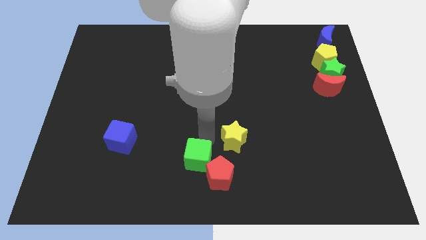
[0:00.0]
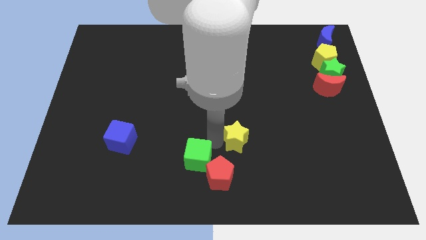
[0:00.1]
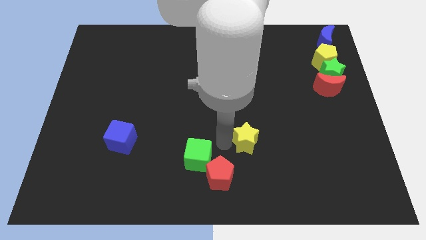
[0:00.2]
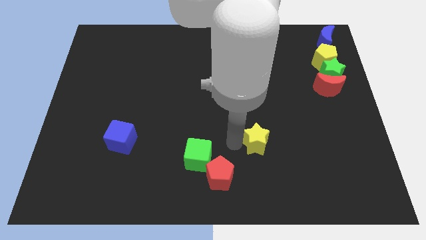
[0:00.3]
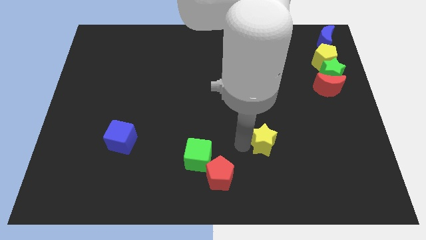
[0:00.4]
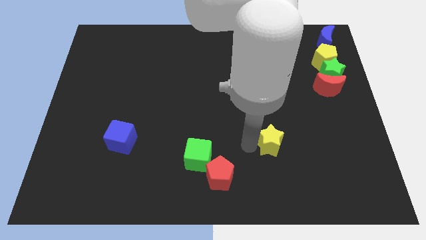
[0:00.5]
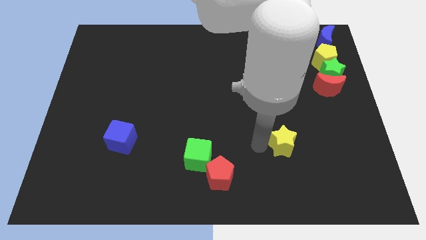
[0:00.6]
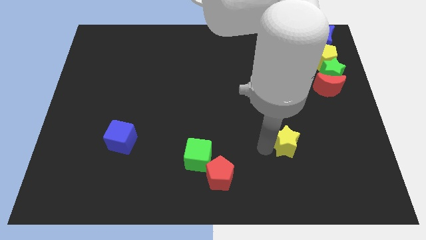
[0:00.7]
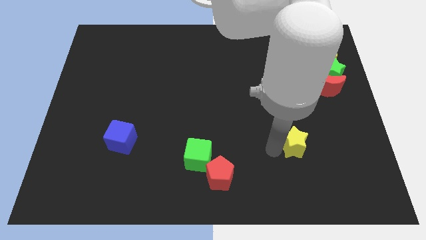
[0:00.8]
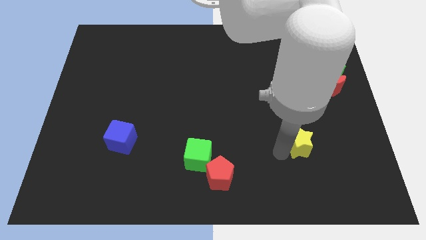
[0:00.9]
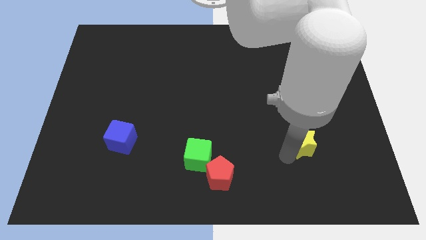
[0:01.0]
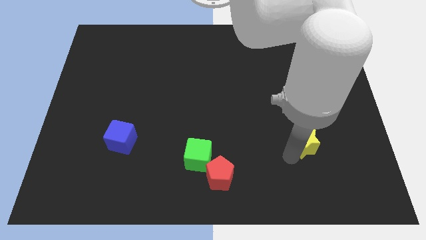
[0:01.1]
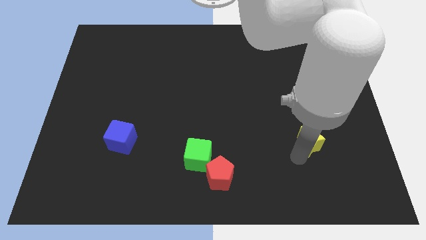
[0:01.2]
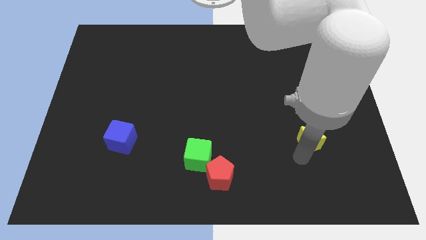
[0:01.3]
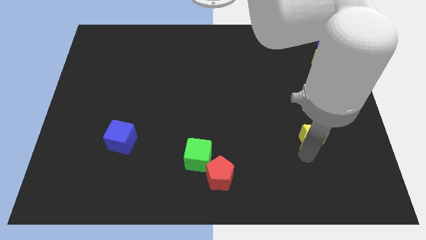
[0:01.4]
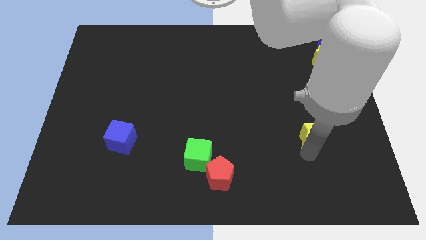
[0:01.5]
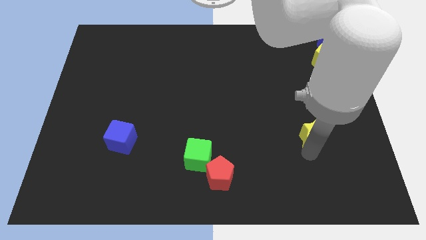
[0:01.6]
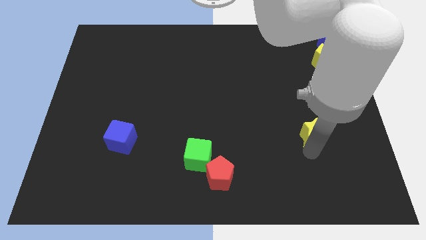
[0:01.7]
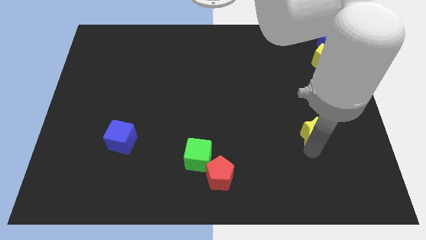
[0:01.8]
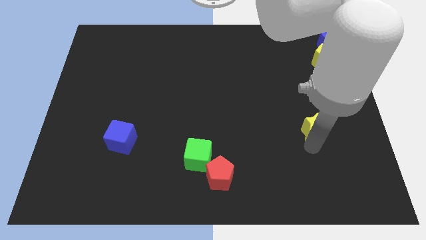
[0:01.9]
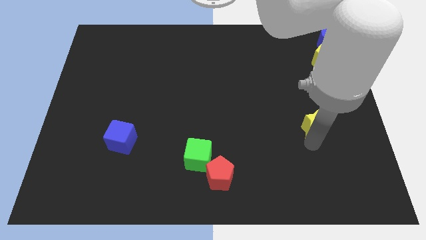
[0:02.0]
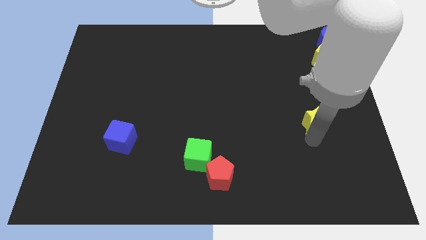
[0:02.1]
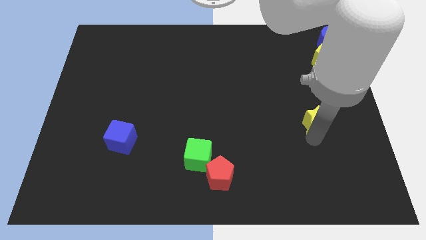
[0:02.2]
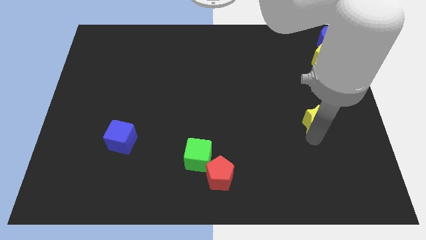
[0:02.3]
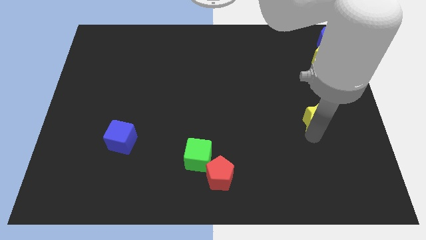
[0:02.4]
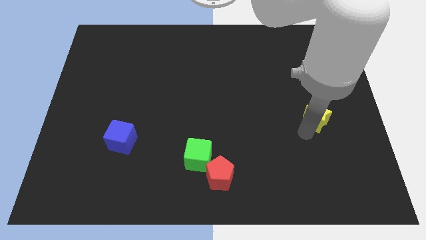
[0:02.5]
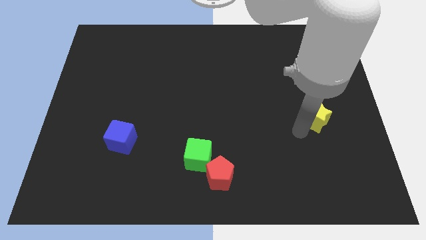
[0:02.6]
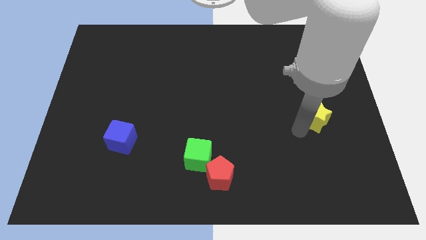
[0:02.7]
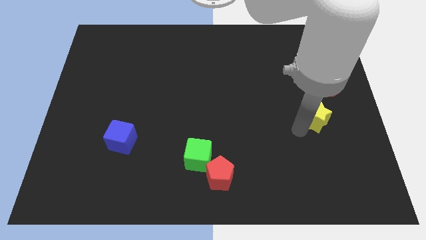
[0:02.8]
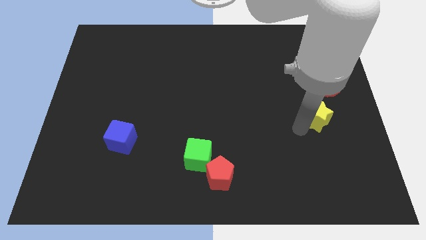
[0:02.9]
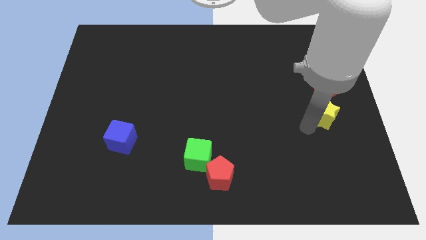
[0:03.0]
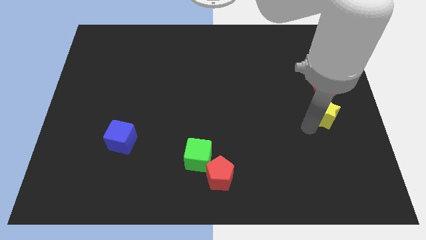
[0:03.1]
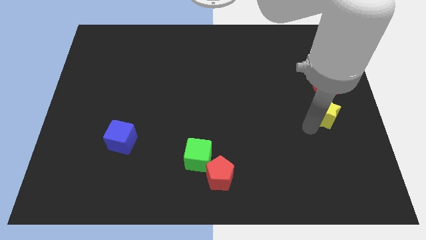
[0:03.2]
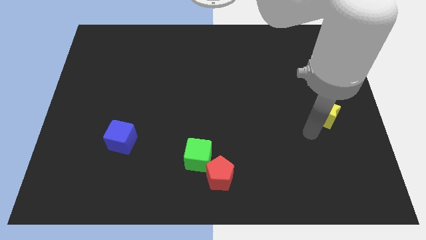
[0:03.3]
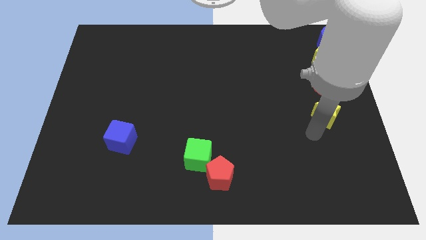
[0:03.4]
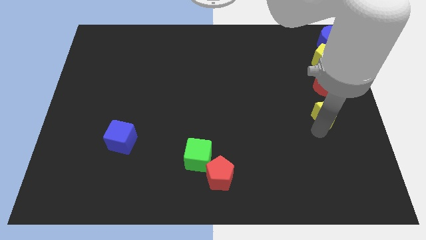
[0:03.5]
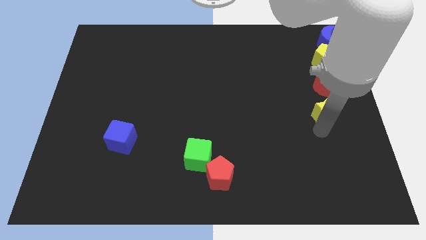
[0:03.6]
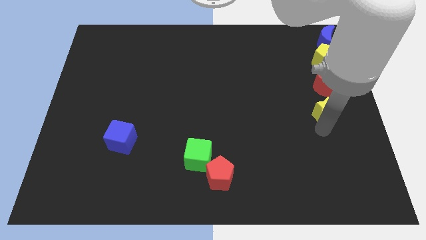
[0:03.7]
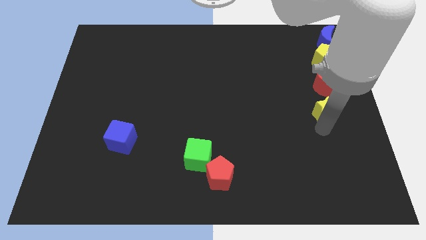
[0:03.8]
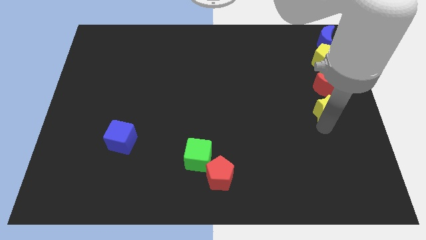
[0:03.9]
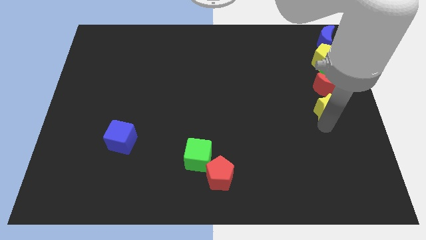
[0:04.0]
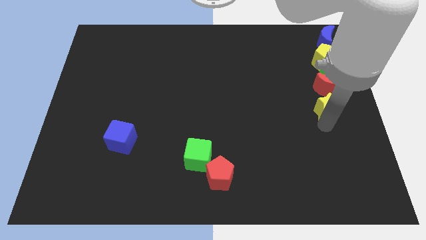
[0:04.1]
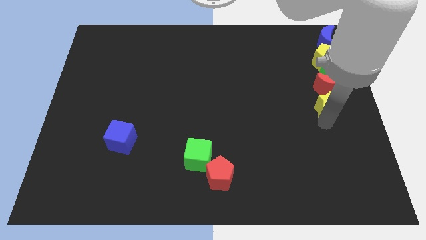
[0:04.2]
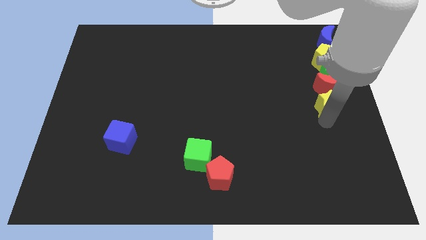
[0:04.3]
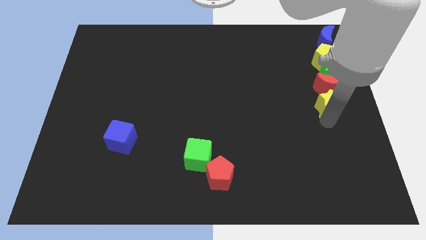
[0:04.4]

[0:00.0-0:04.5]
take the yellow star close to the red crescent

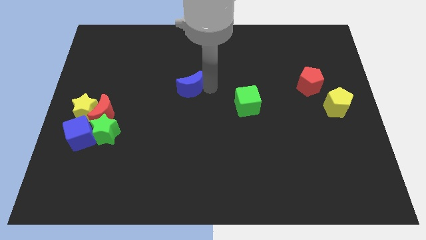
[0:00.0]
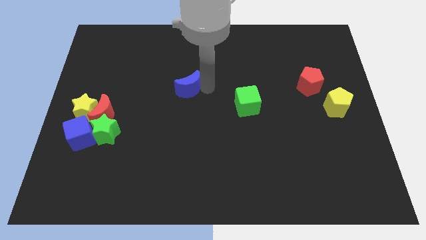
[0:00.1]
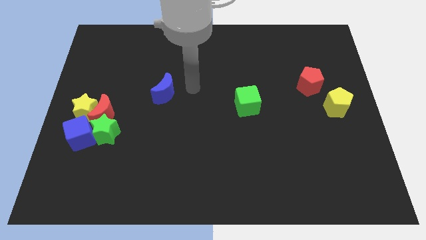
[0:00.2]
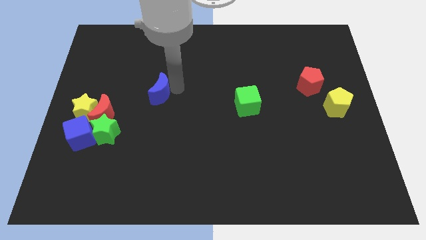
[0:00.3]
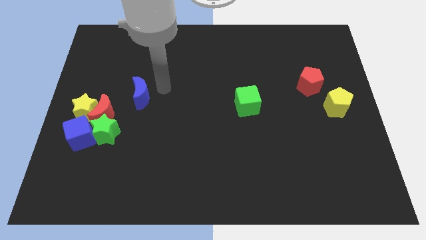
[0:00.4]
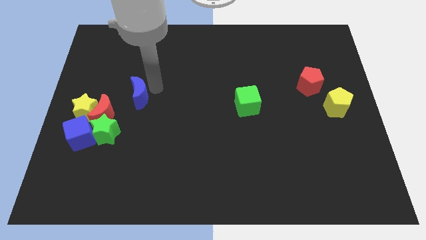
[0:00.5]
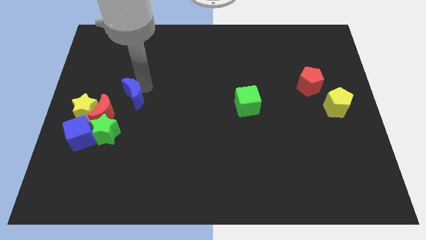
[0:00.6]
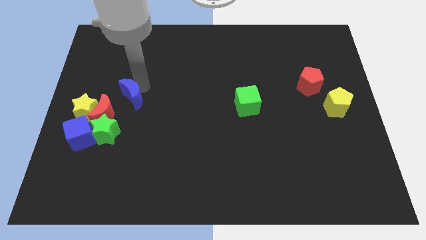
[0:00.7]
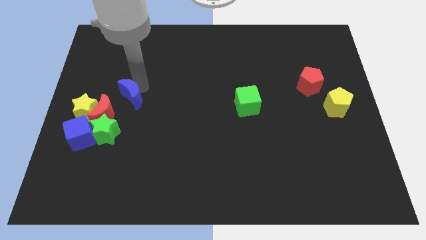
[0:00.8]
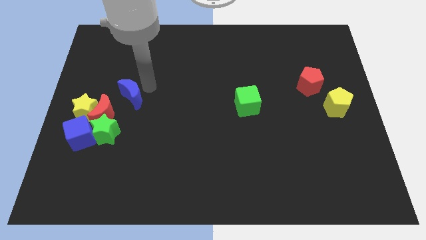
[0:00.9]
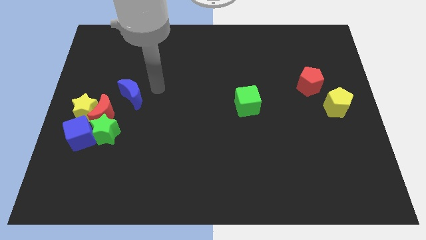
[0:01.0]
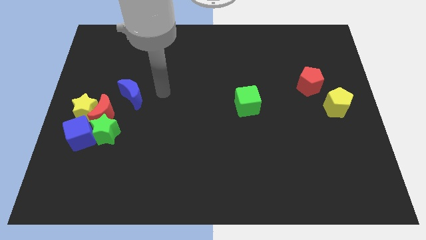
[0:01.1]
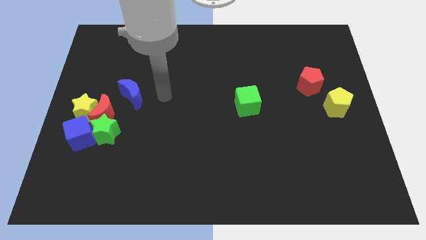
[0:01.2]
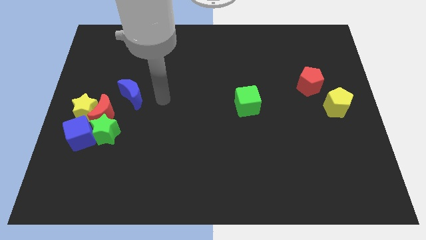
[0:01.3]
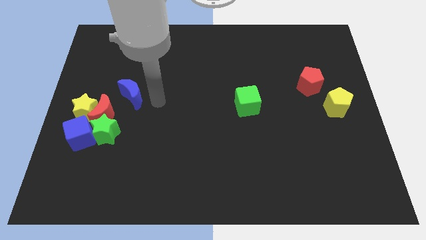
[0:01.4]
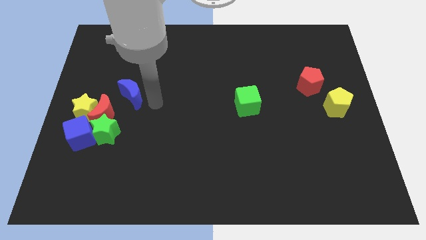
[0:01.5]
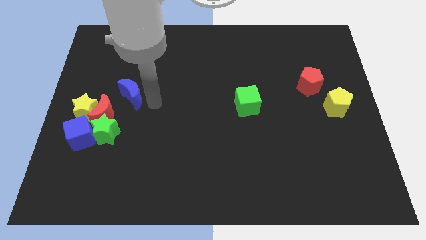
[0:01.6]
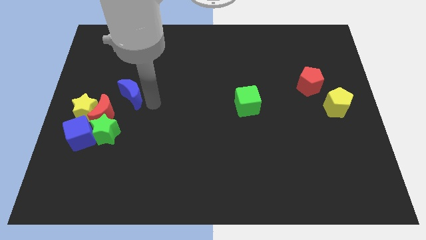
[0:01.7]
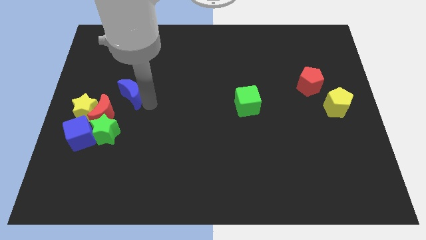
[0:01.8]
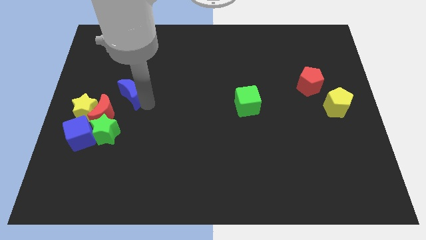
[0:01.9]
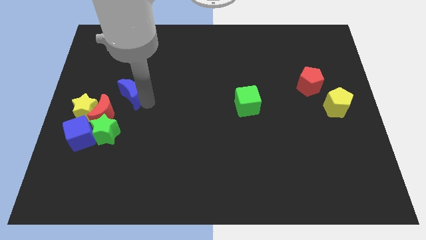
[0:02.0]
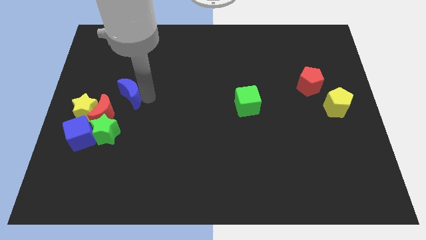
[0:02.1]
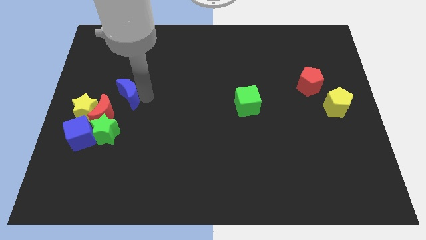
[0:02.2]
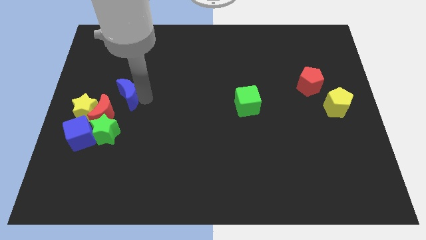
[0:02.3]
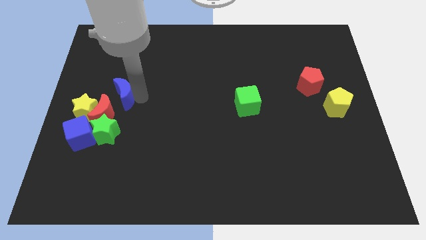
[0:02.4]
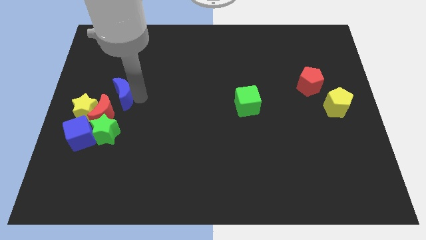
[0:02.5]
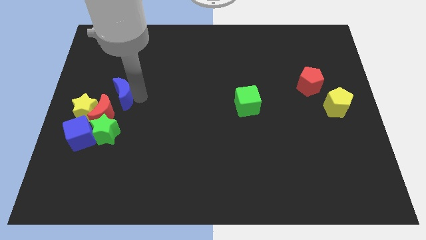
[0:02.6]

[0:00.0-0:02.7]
push blue moon towards group of blocks

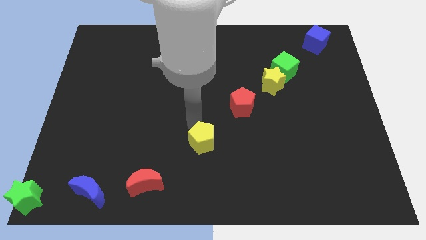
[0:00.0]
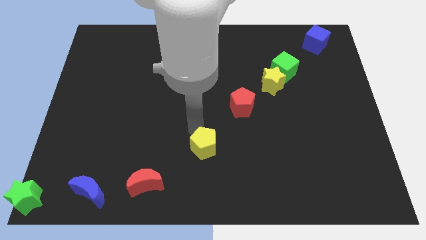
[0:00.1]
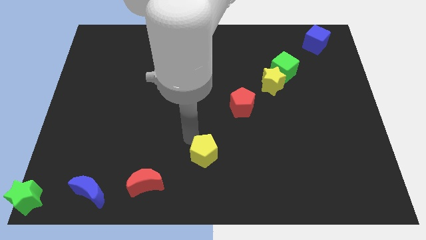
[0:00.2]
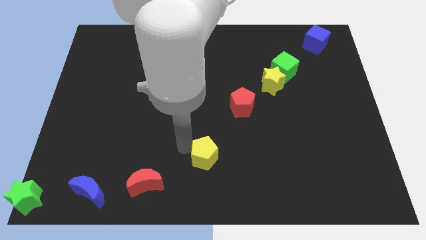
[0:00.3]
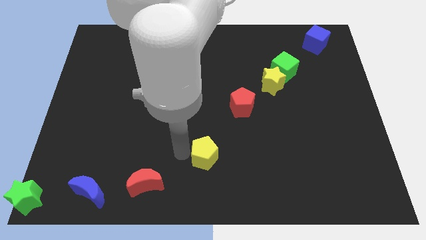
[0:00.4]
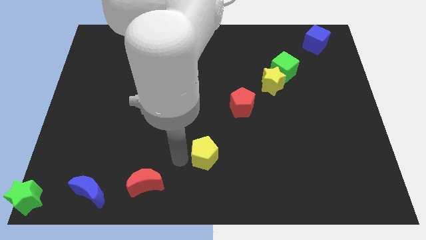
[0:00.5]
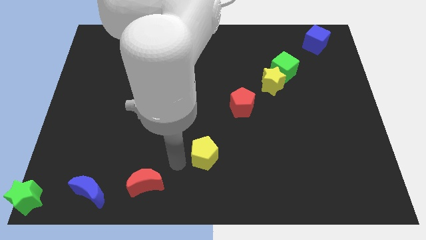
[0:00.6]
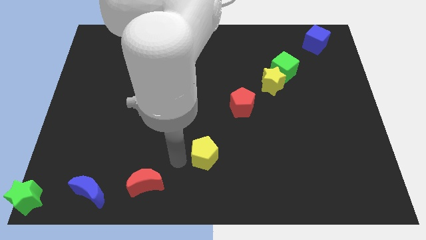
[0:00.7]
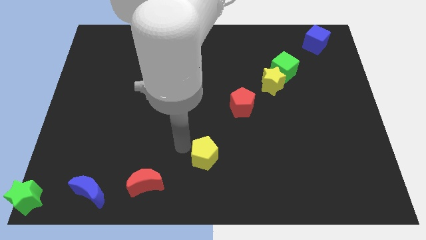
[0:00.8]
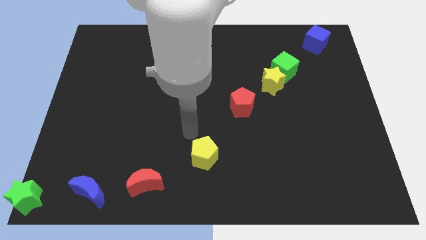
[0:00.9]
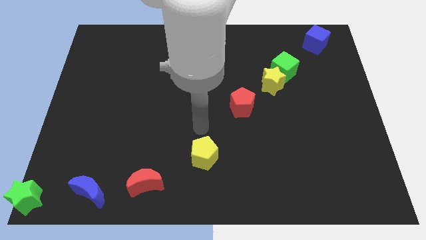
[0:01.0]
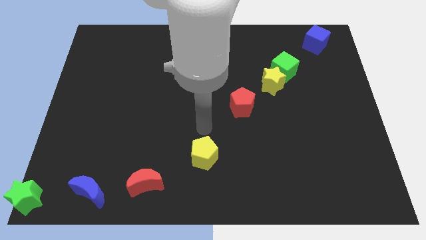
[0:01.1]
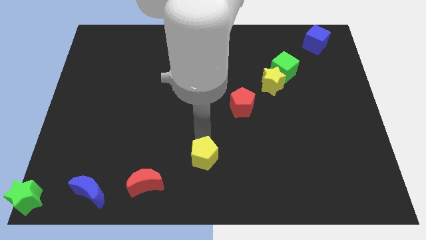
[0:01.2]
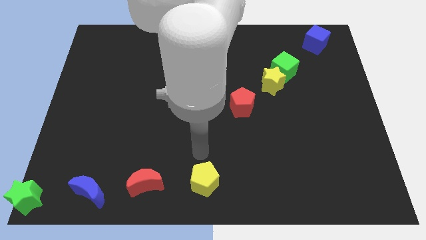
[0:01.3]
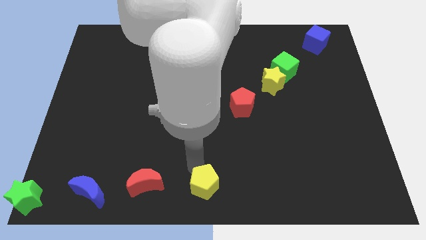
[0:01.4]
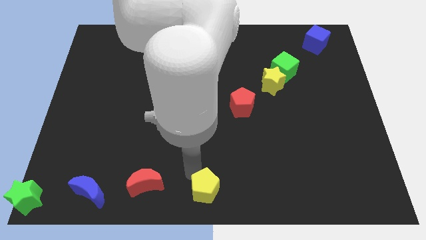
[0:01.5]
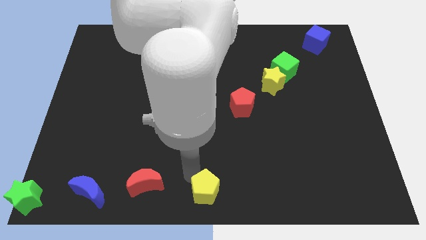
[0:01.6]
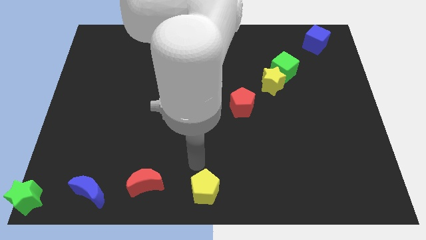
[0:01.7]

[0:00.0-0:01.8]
move the yellow pentagon to the bottom middle
